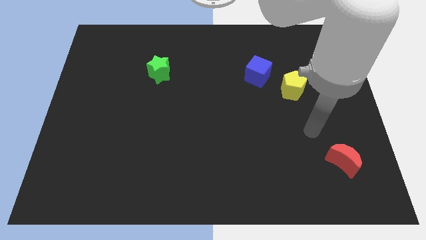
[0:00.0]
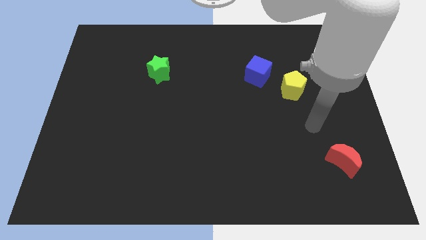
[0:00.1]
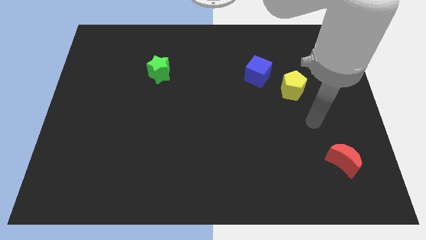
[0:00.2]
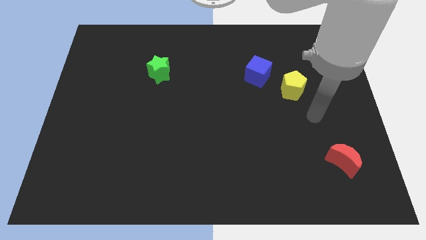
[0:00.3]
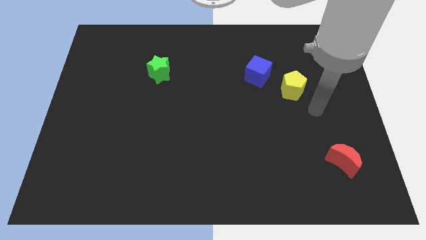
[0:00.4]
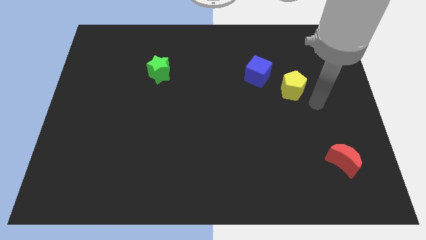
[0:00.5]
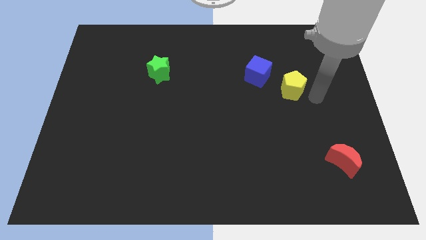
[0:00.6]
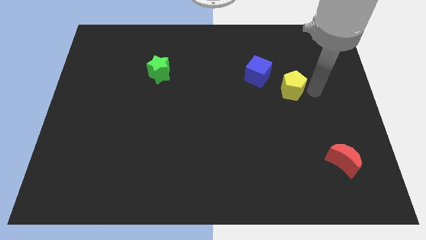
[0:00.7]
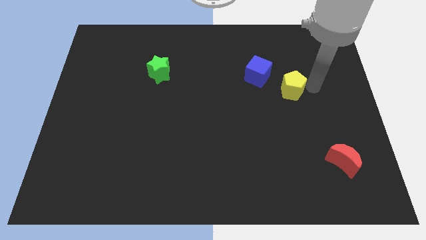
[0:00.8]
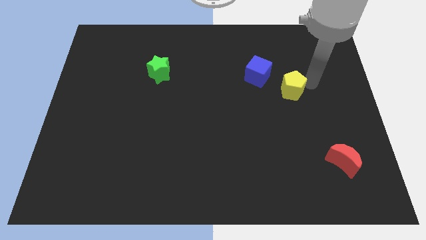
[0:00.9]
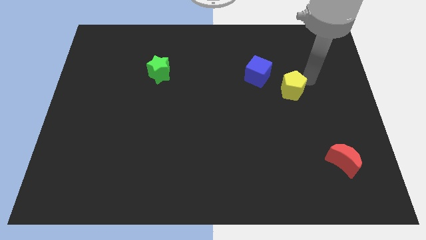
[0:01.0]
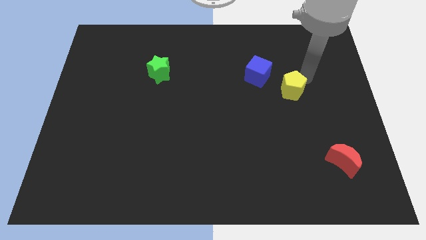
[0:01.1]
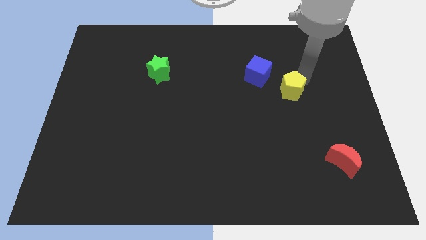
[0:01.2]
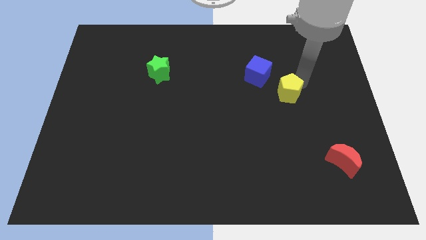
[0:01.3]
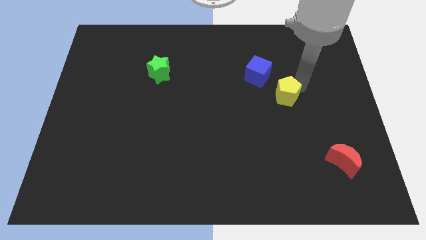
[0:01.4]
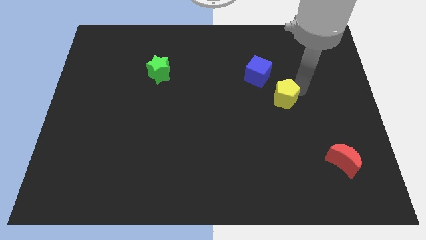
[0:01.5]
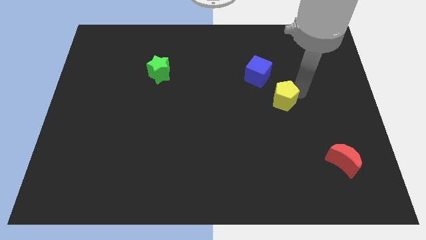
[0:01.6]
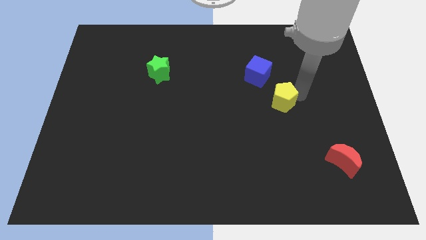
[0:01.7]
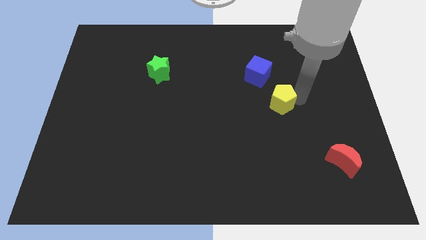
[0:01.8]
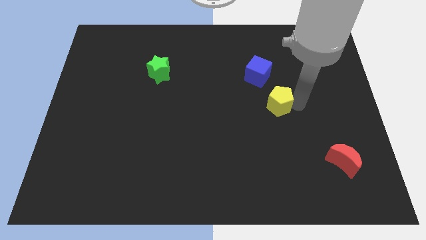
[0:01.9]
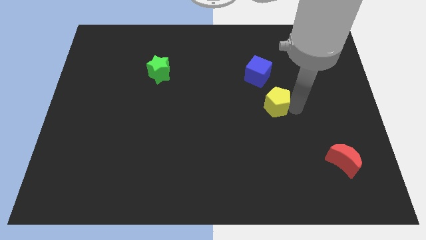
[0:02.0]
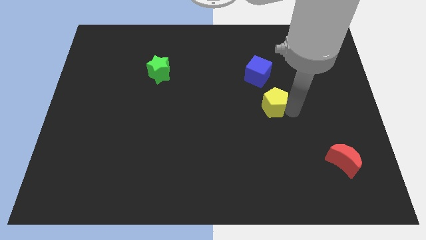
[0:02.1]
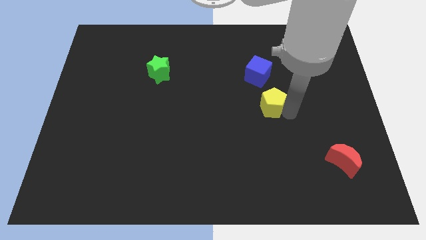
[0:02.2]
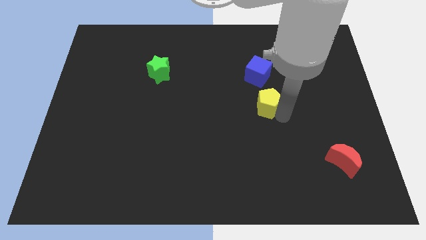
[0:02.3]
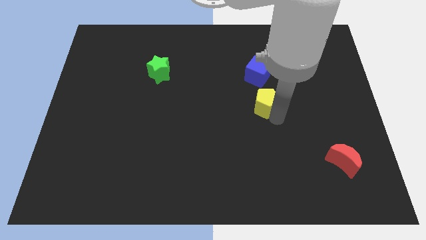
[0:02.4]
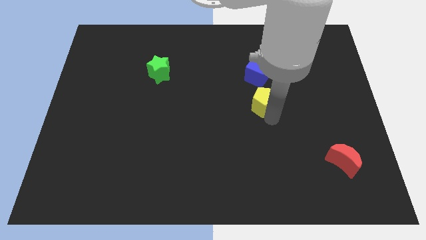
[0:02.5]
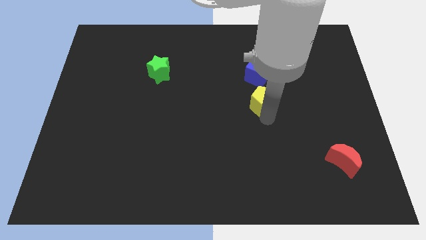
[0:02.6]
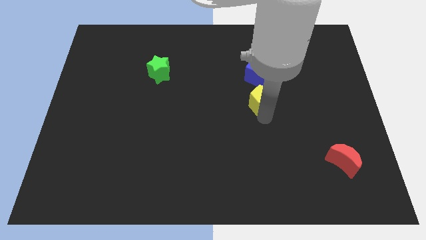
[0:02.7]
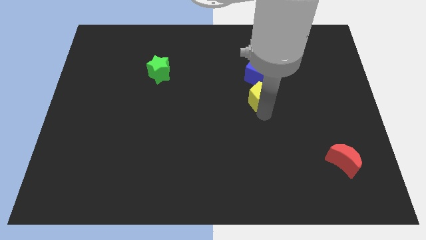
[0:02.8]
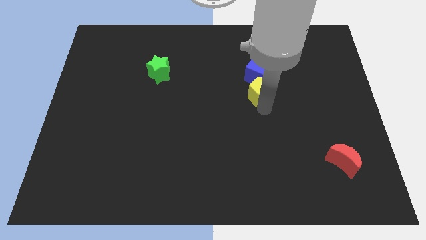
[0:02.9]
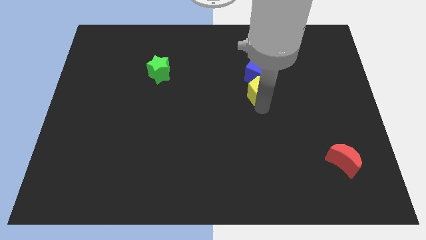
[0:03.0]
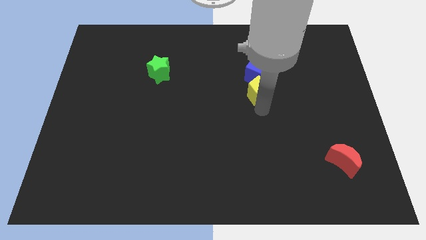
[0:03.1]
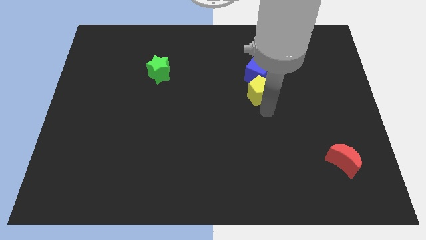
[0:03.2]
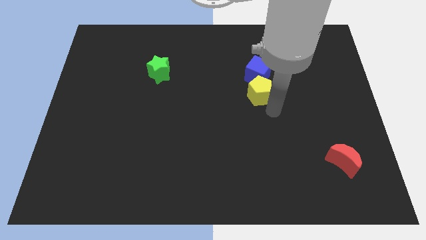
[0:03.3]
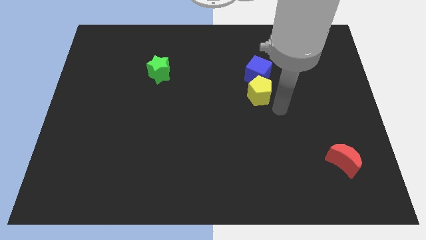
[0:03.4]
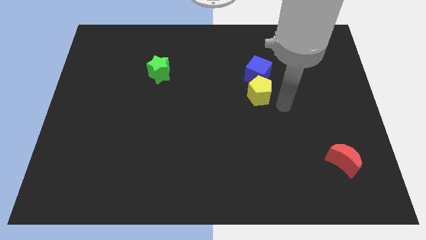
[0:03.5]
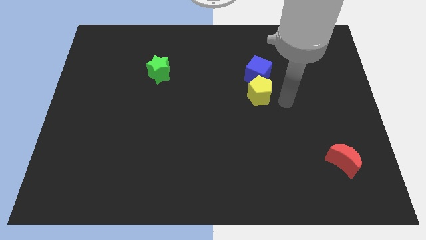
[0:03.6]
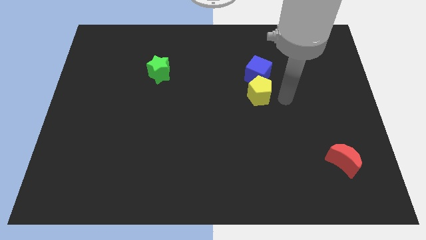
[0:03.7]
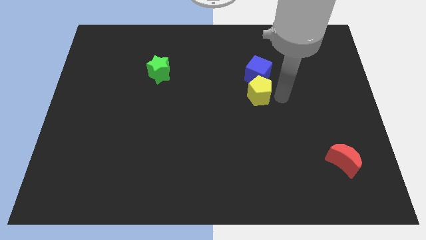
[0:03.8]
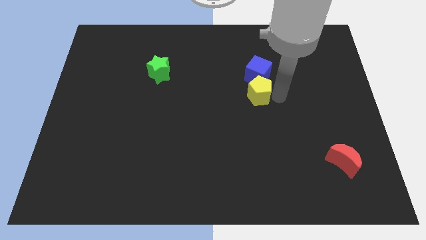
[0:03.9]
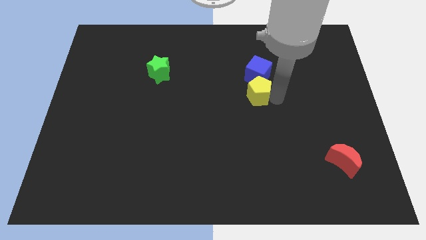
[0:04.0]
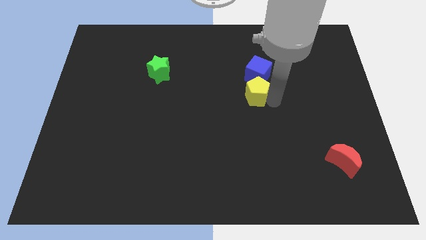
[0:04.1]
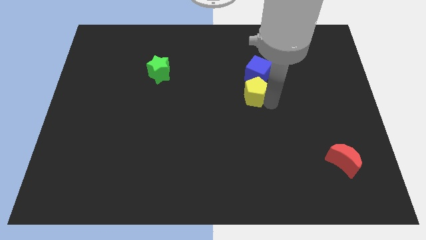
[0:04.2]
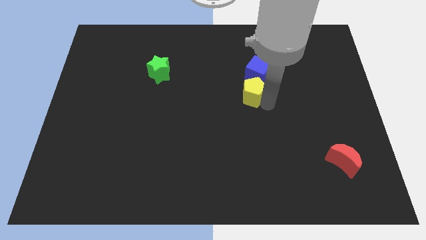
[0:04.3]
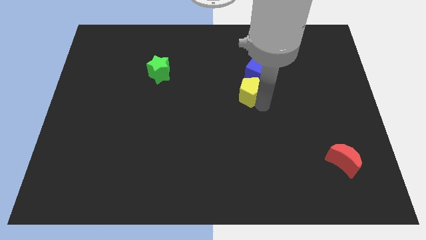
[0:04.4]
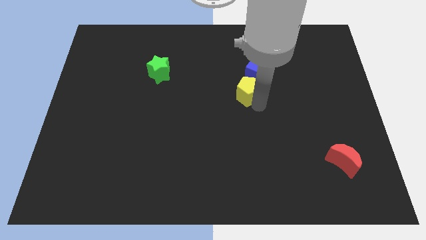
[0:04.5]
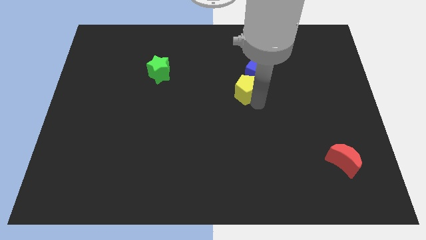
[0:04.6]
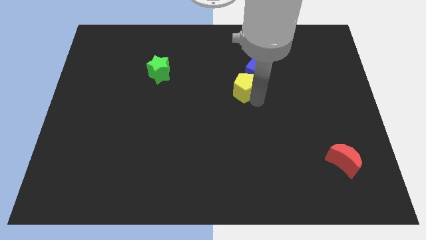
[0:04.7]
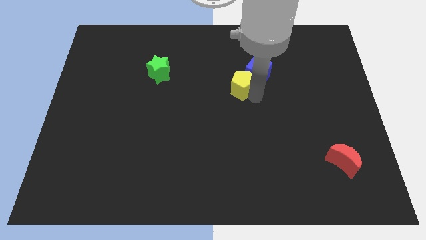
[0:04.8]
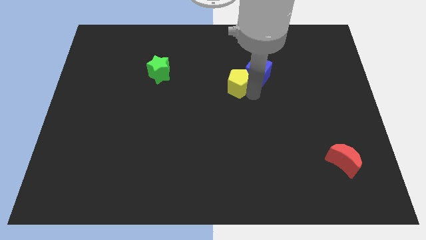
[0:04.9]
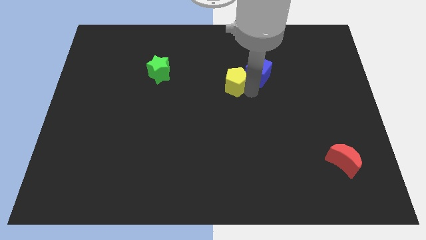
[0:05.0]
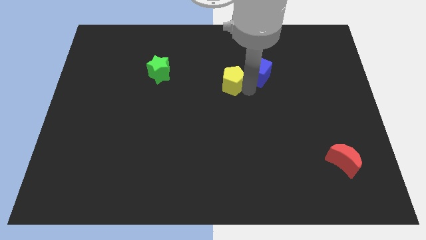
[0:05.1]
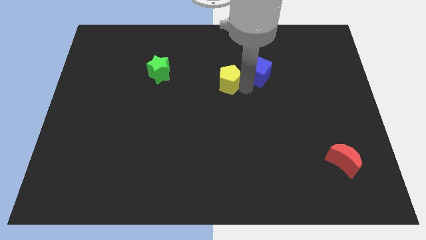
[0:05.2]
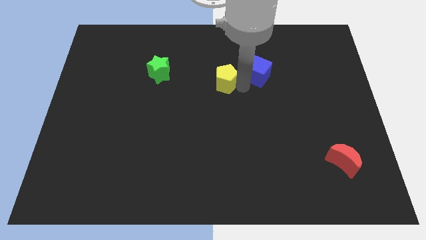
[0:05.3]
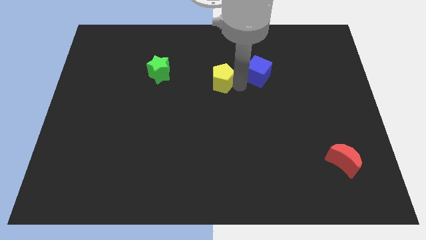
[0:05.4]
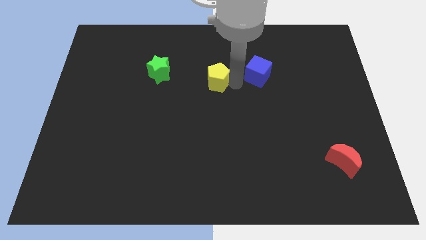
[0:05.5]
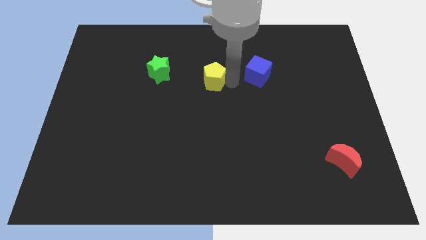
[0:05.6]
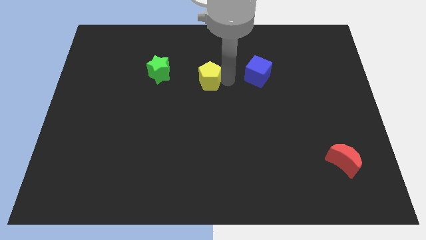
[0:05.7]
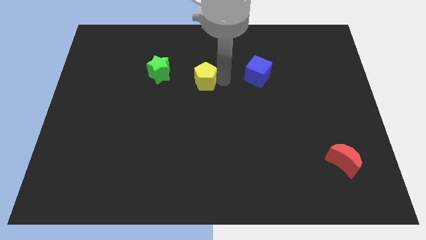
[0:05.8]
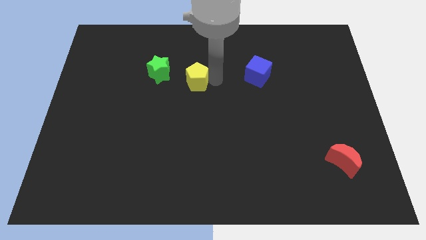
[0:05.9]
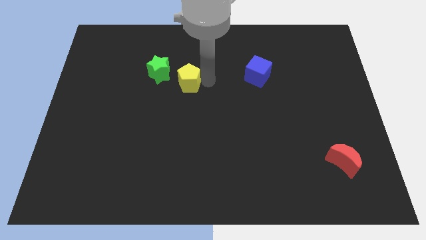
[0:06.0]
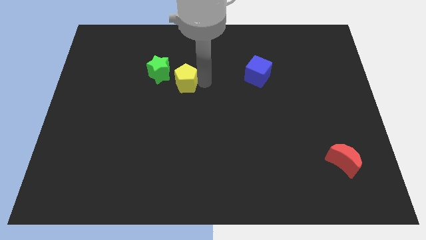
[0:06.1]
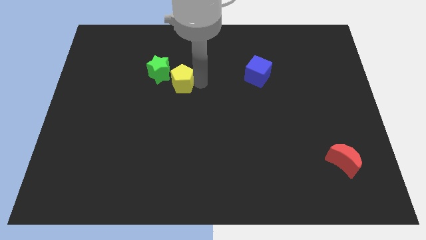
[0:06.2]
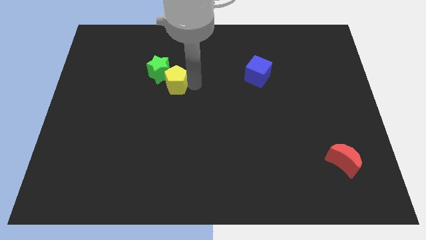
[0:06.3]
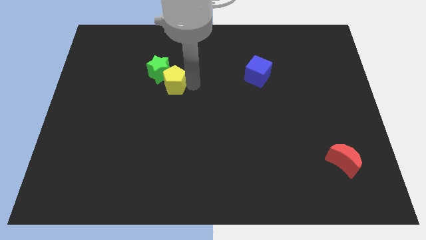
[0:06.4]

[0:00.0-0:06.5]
slide the yellow block close to the star

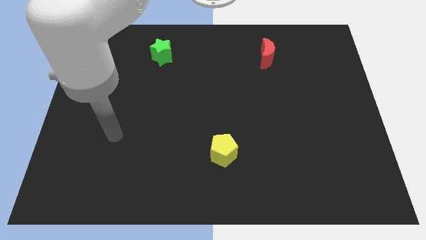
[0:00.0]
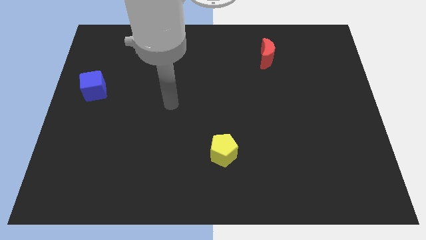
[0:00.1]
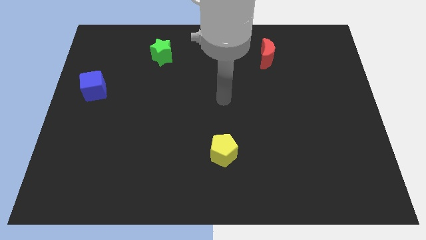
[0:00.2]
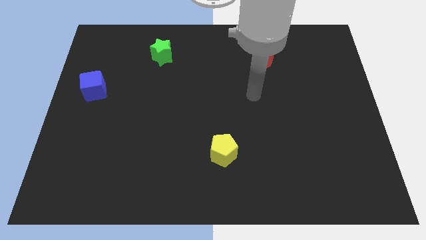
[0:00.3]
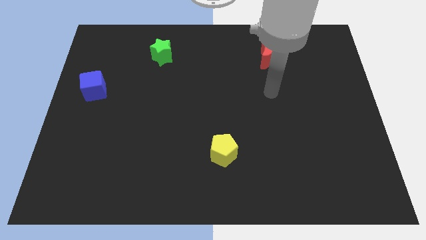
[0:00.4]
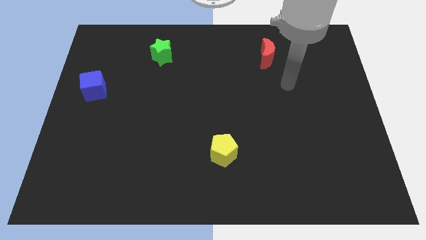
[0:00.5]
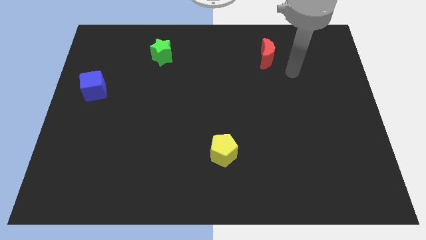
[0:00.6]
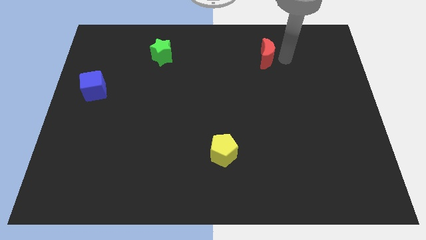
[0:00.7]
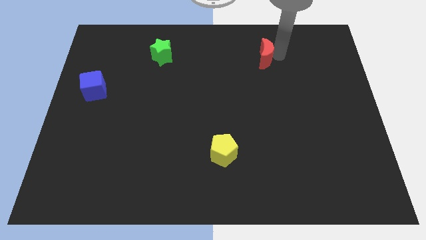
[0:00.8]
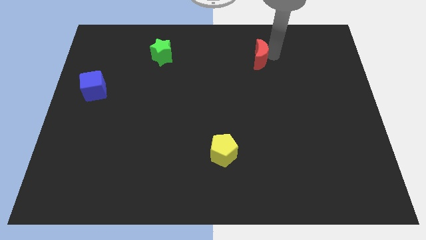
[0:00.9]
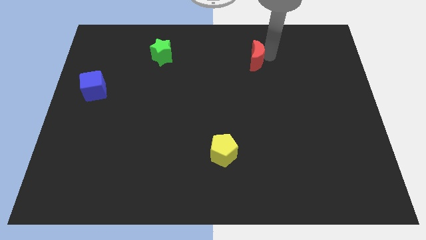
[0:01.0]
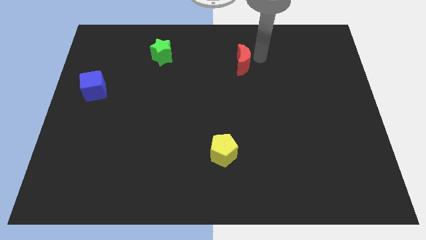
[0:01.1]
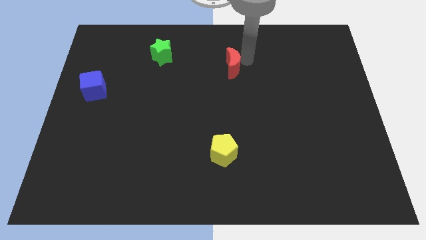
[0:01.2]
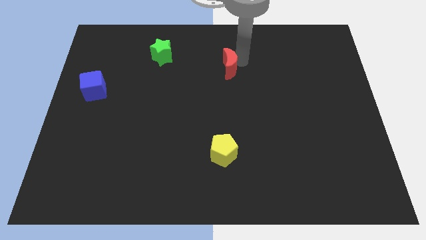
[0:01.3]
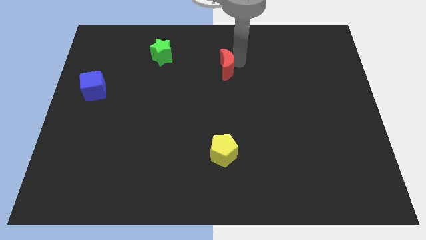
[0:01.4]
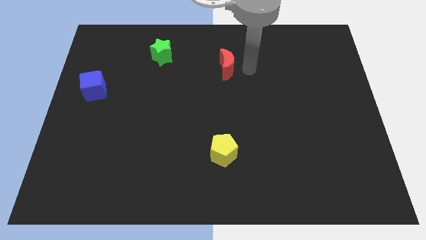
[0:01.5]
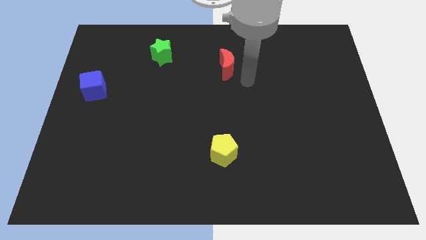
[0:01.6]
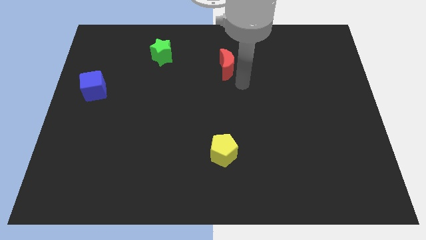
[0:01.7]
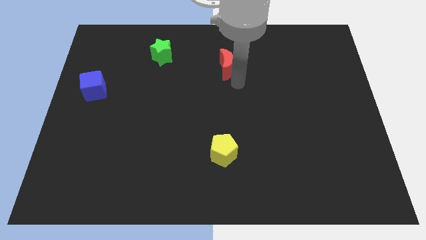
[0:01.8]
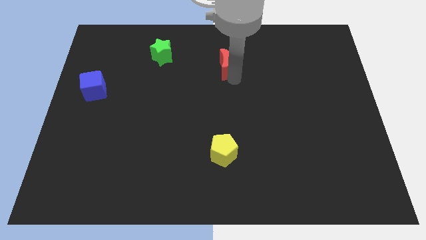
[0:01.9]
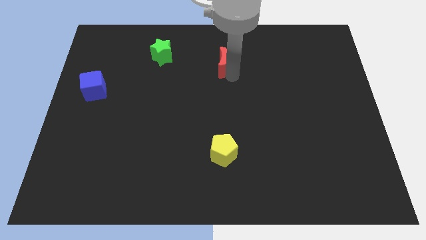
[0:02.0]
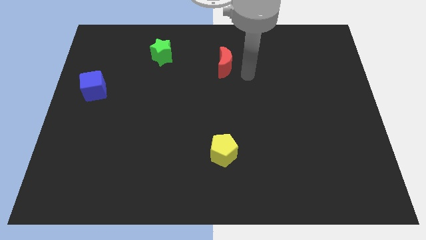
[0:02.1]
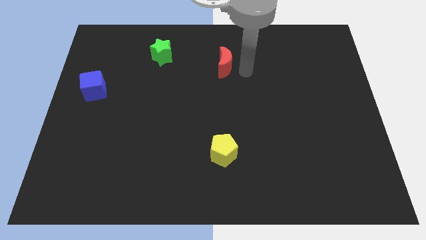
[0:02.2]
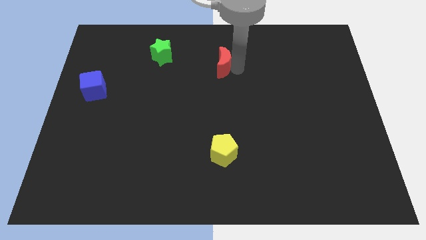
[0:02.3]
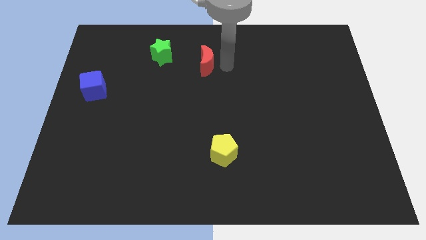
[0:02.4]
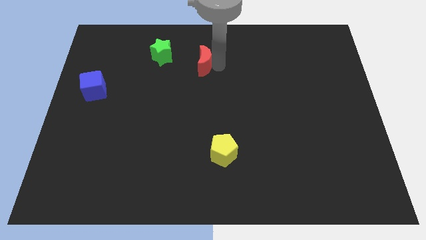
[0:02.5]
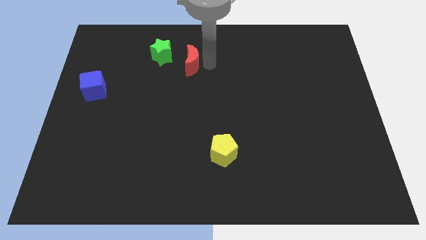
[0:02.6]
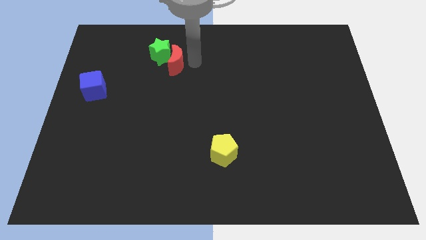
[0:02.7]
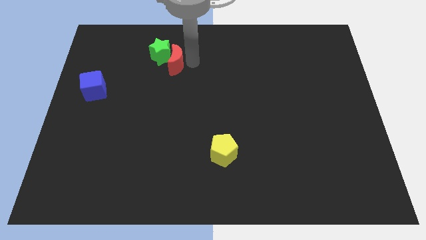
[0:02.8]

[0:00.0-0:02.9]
push the red block towards the green block
